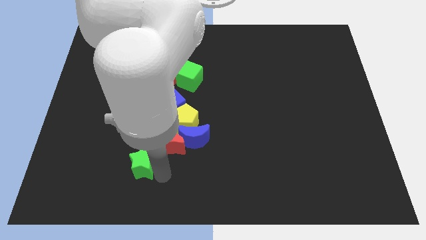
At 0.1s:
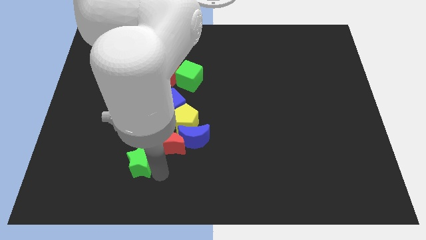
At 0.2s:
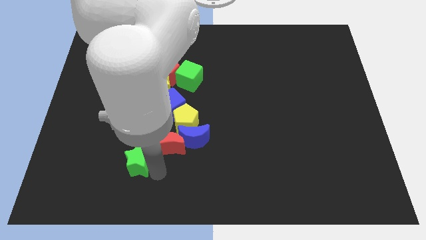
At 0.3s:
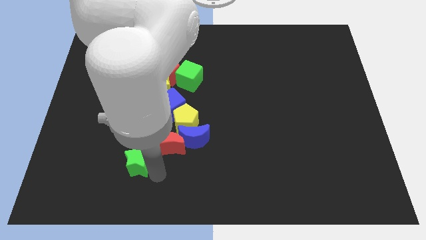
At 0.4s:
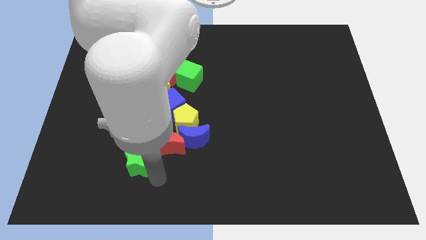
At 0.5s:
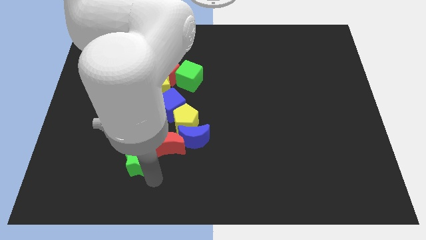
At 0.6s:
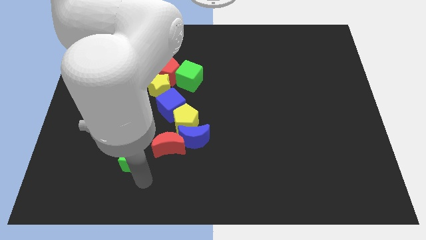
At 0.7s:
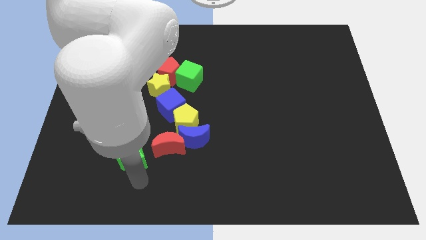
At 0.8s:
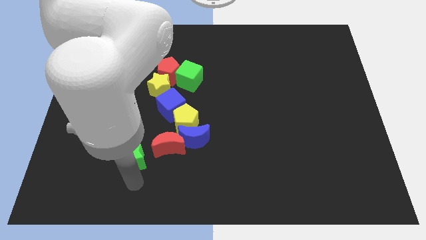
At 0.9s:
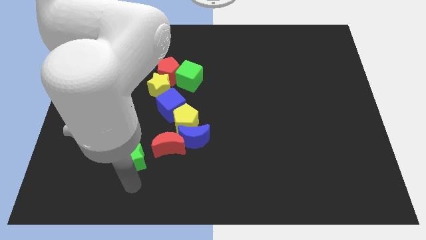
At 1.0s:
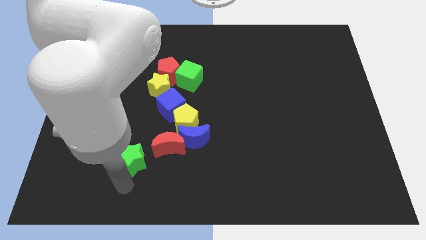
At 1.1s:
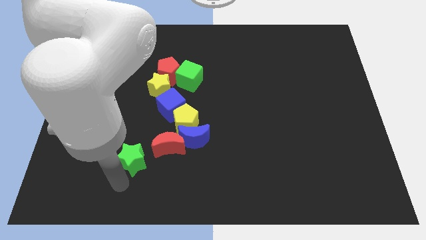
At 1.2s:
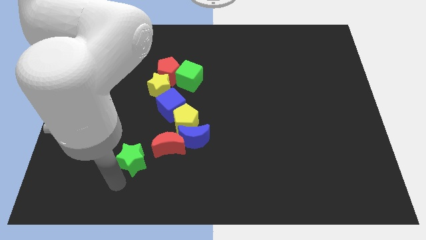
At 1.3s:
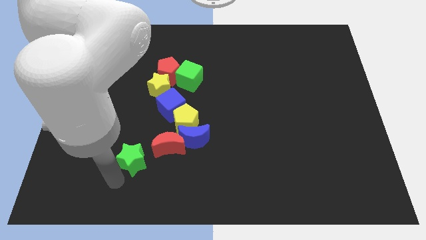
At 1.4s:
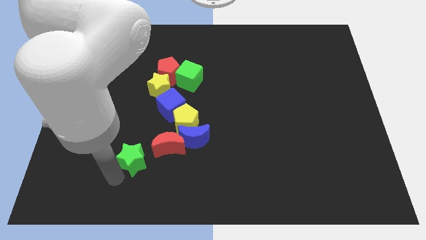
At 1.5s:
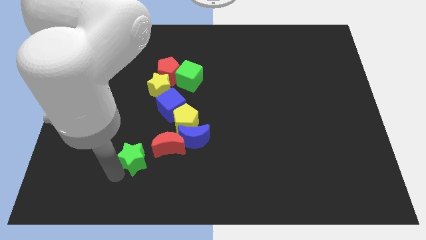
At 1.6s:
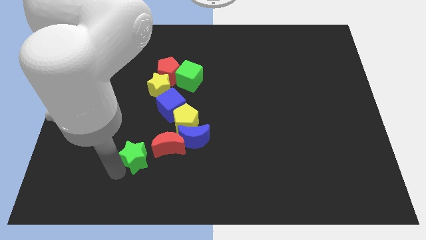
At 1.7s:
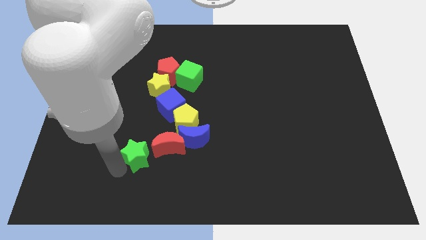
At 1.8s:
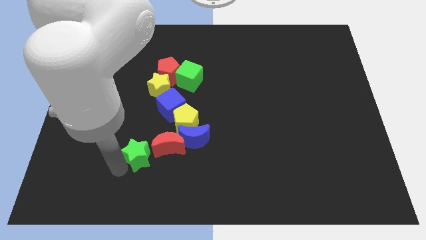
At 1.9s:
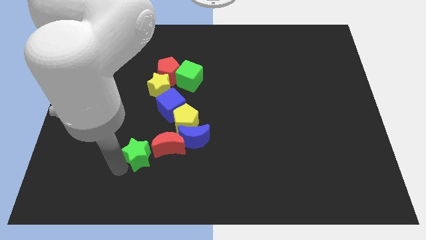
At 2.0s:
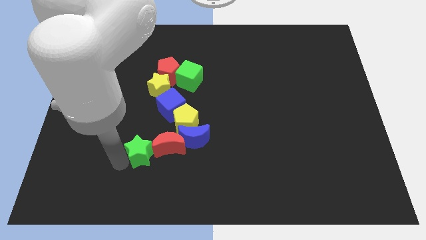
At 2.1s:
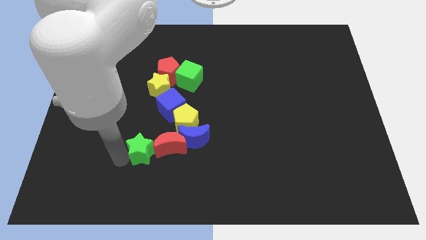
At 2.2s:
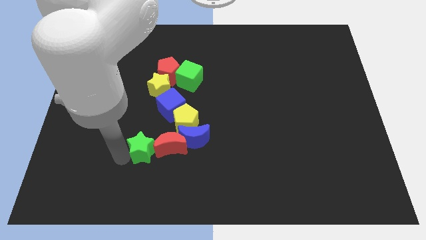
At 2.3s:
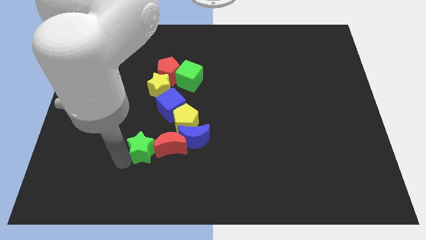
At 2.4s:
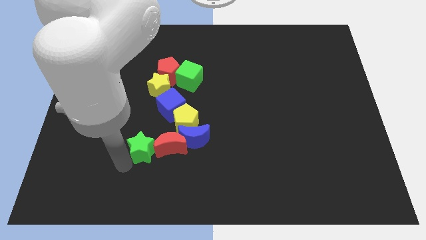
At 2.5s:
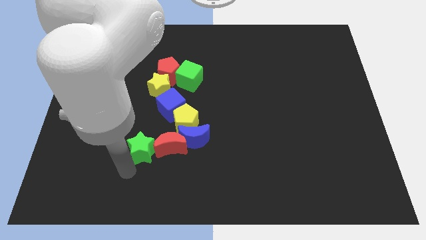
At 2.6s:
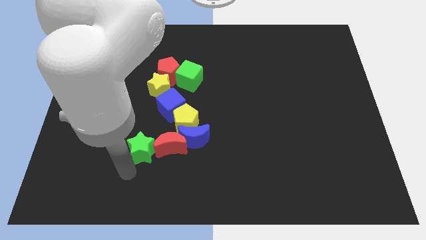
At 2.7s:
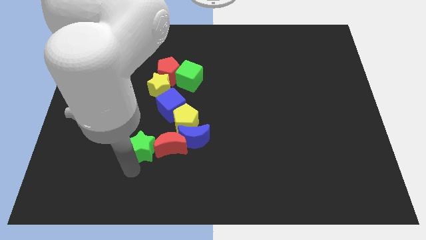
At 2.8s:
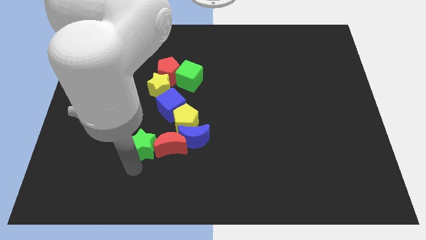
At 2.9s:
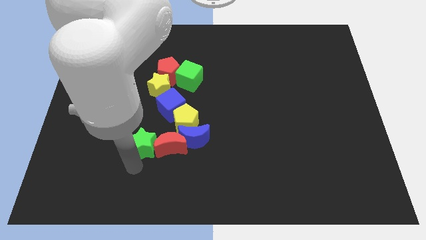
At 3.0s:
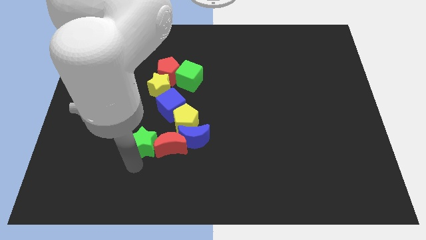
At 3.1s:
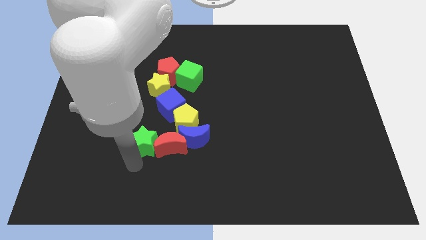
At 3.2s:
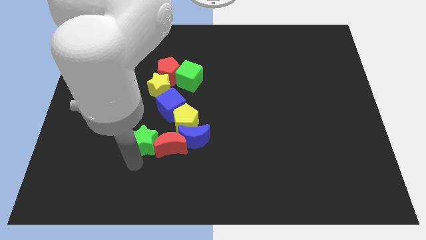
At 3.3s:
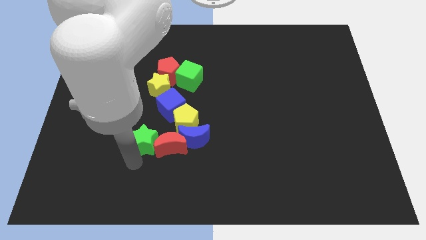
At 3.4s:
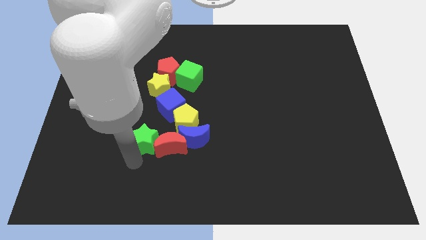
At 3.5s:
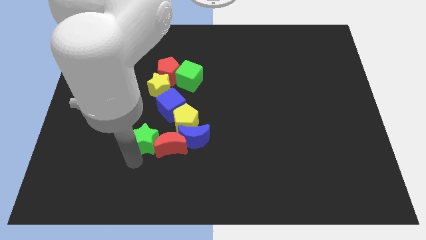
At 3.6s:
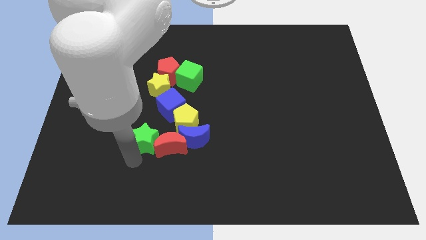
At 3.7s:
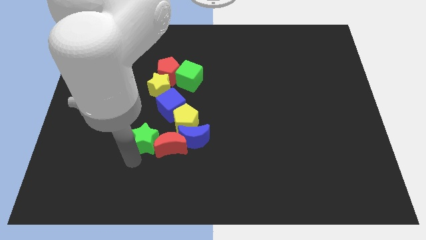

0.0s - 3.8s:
move the green star slightly to the upwards

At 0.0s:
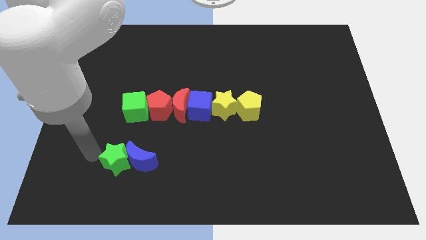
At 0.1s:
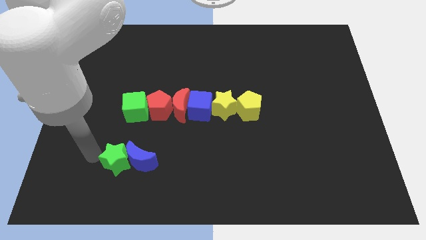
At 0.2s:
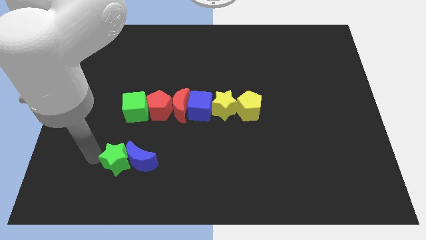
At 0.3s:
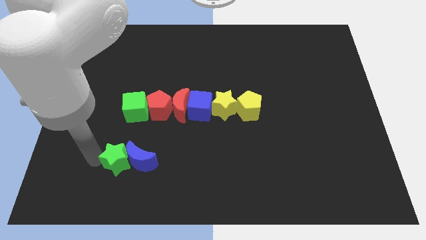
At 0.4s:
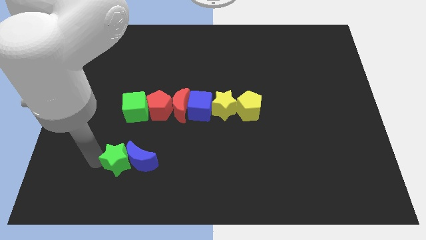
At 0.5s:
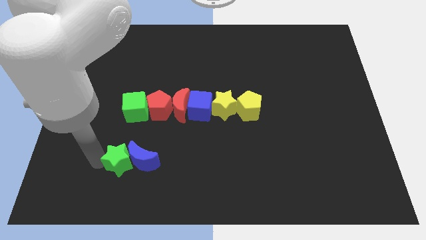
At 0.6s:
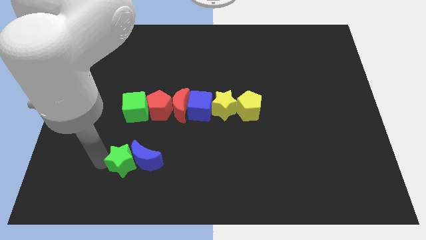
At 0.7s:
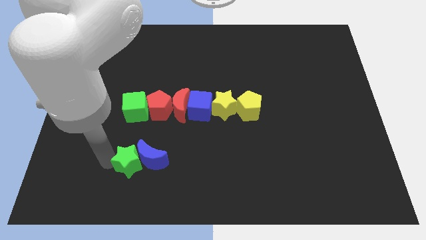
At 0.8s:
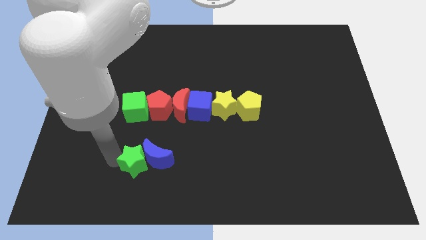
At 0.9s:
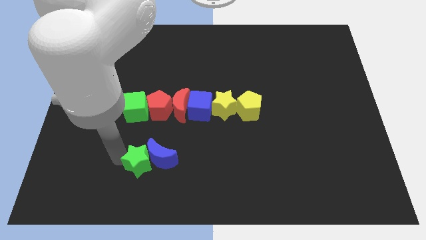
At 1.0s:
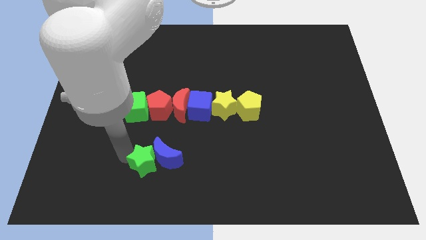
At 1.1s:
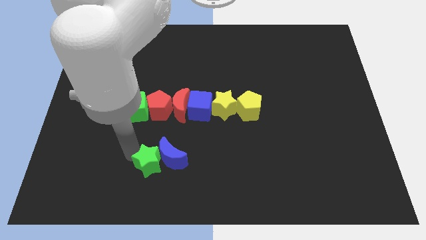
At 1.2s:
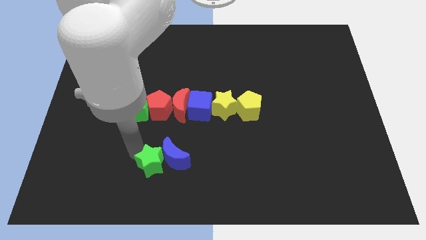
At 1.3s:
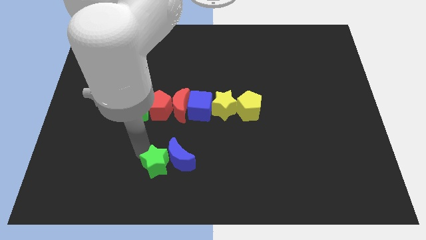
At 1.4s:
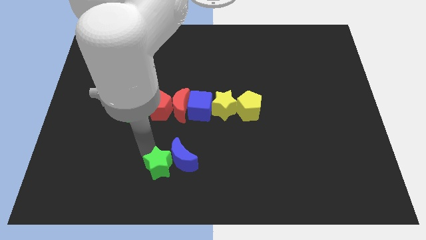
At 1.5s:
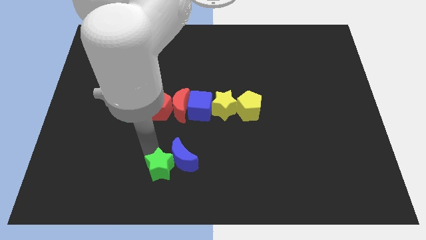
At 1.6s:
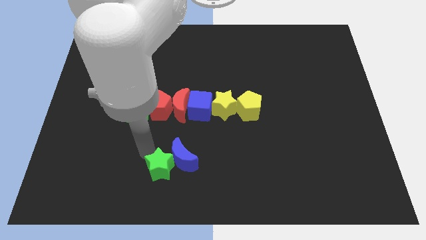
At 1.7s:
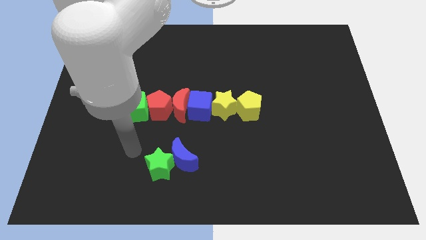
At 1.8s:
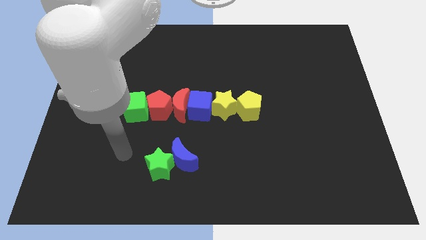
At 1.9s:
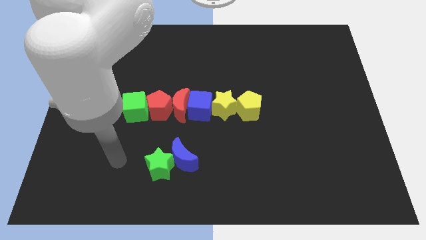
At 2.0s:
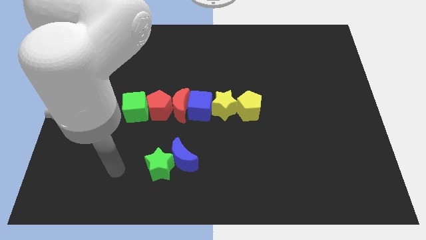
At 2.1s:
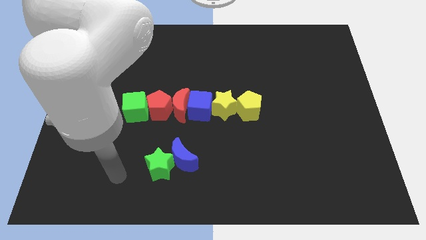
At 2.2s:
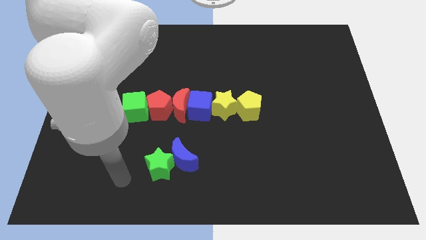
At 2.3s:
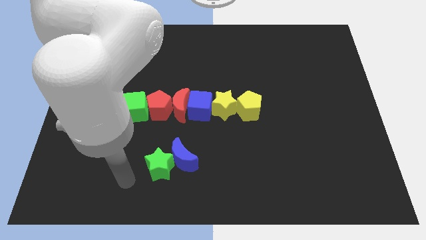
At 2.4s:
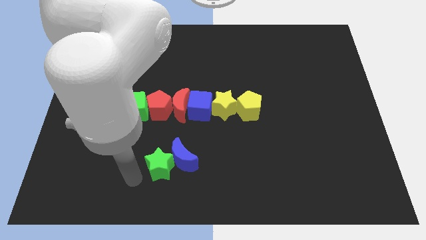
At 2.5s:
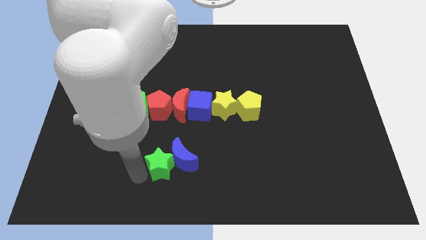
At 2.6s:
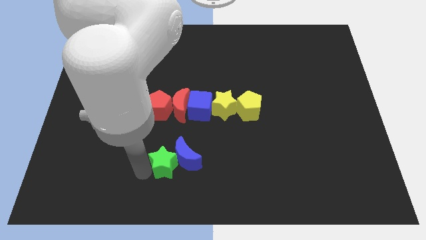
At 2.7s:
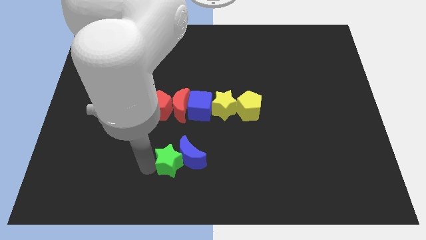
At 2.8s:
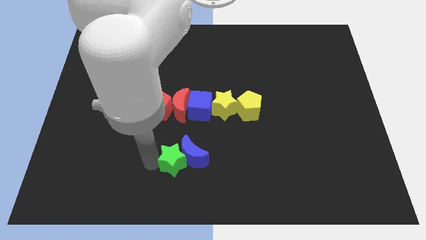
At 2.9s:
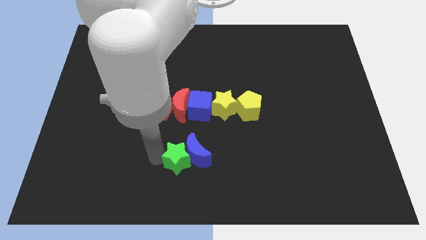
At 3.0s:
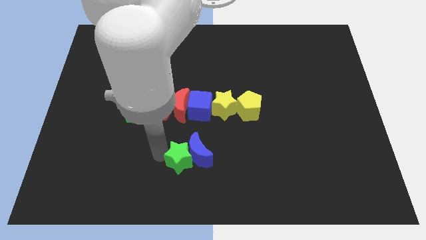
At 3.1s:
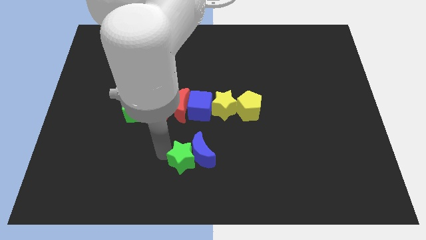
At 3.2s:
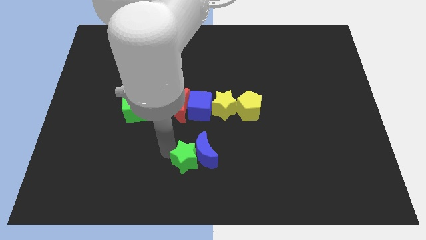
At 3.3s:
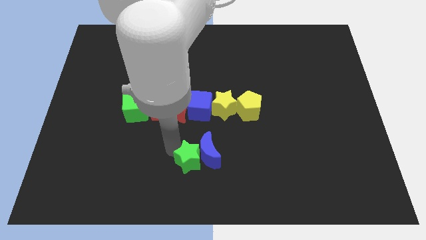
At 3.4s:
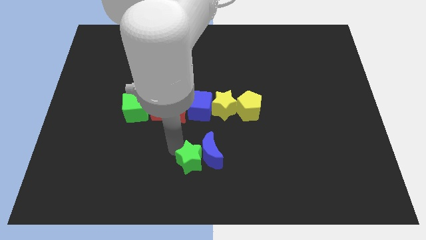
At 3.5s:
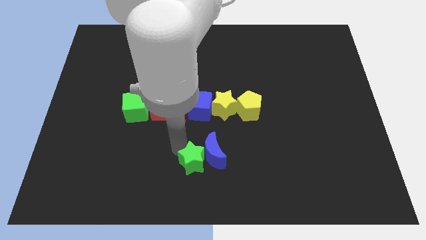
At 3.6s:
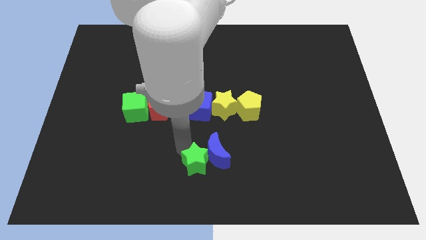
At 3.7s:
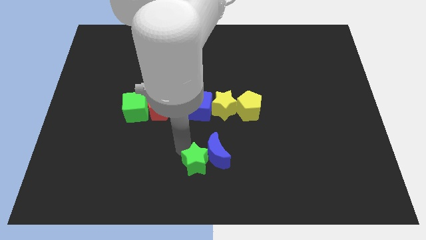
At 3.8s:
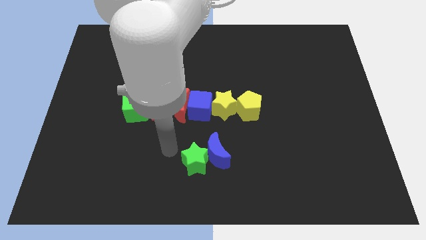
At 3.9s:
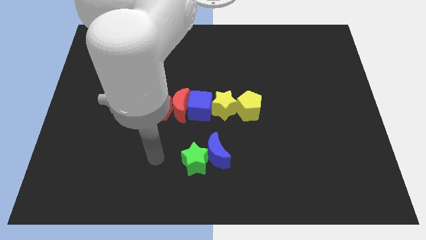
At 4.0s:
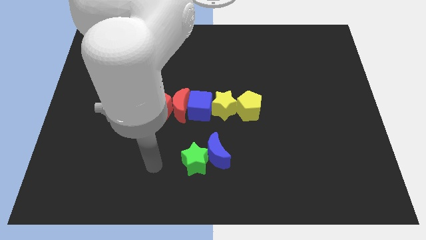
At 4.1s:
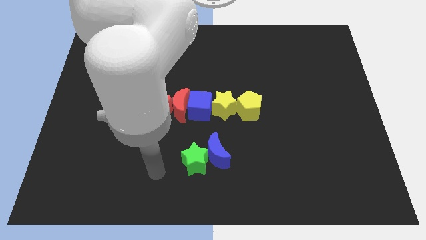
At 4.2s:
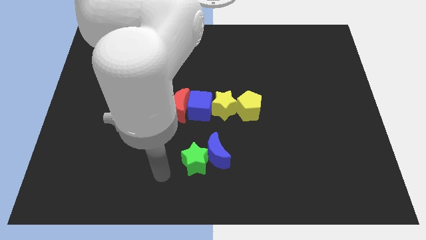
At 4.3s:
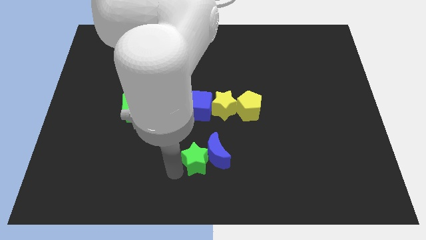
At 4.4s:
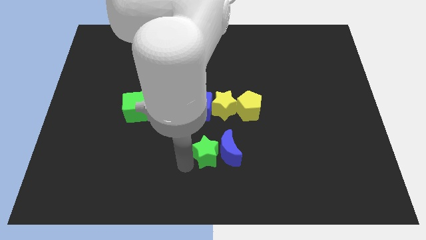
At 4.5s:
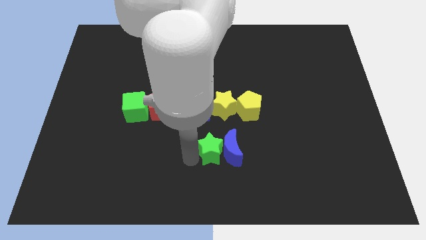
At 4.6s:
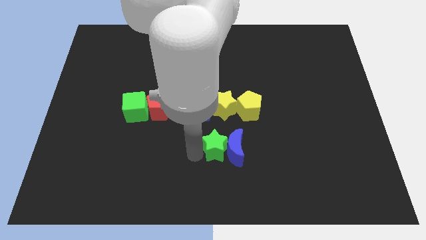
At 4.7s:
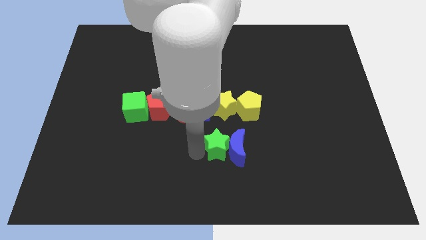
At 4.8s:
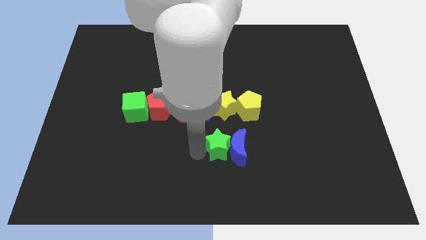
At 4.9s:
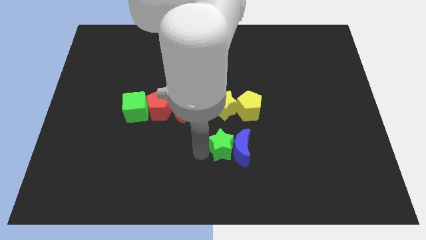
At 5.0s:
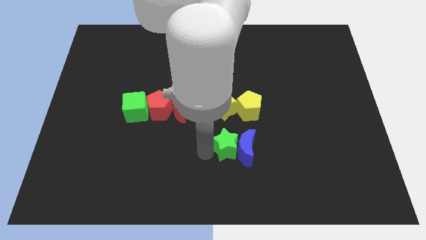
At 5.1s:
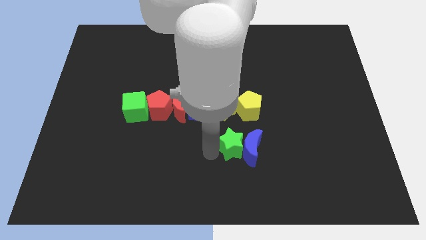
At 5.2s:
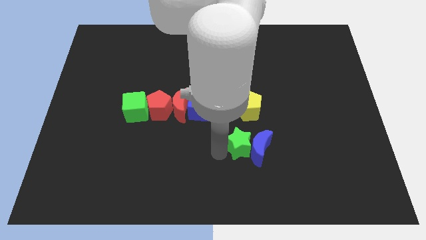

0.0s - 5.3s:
push the green star and blue cube to the right side of the board
